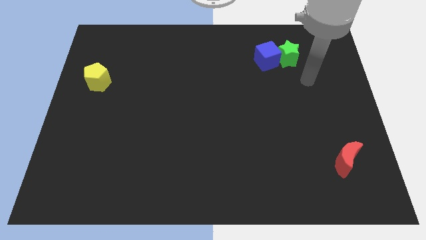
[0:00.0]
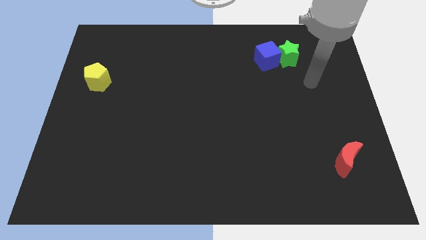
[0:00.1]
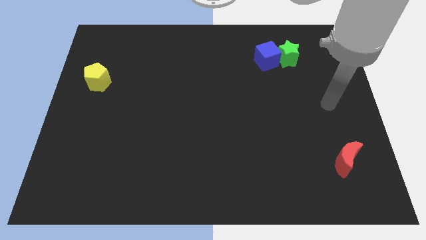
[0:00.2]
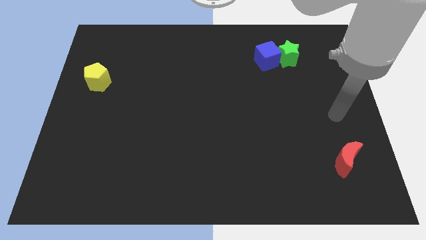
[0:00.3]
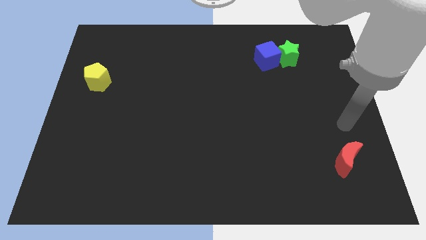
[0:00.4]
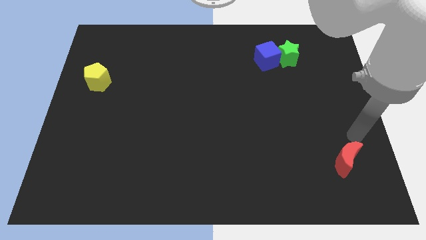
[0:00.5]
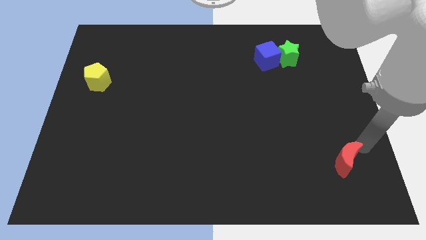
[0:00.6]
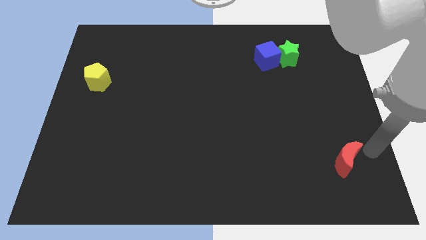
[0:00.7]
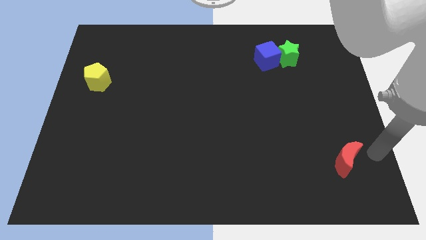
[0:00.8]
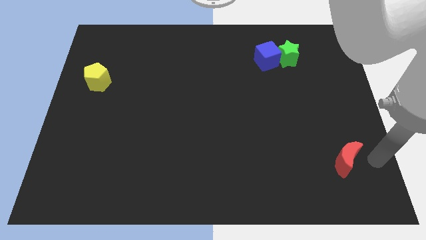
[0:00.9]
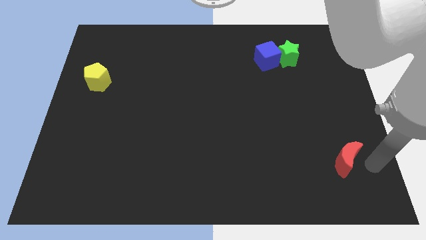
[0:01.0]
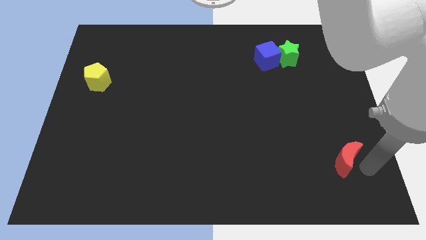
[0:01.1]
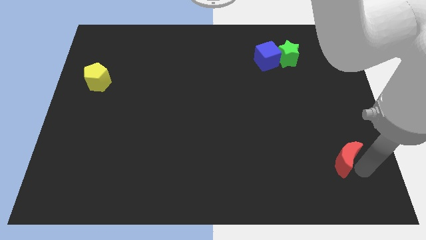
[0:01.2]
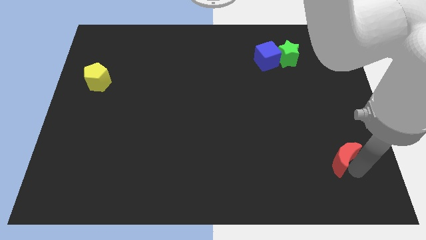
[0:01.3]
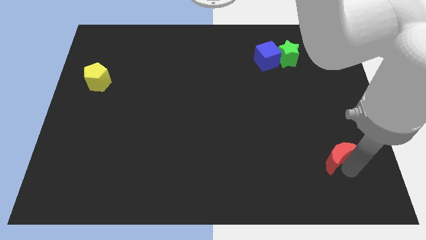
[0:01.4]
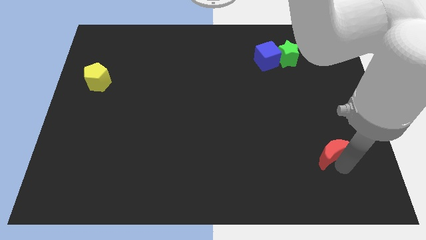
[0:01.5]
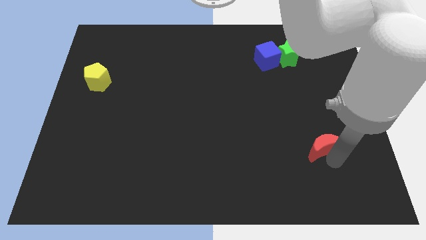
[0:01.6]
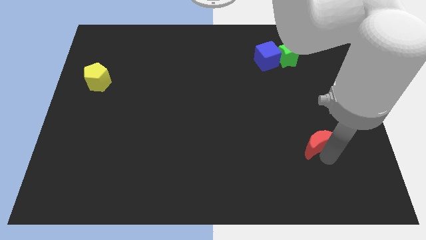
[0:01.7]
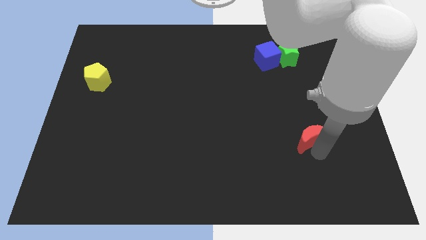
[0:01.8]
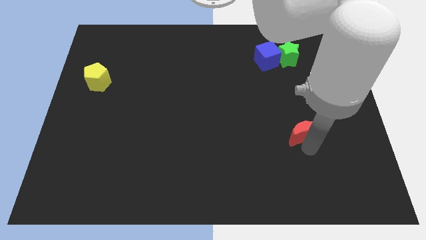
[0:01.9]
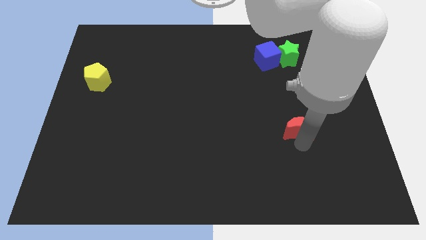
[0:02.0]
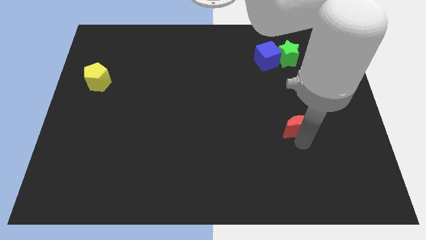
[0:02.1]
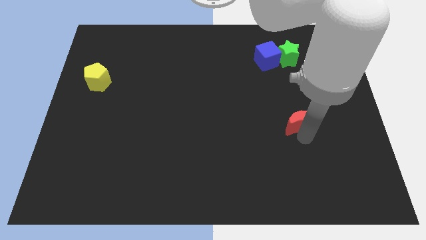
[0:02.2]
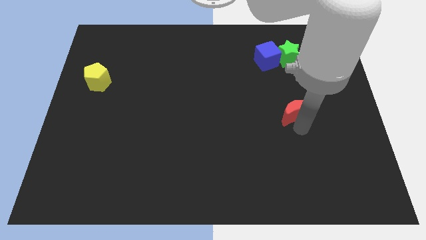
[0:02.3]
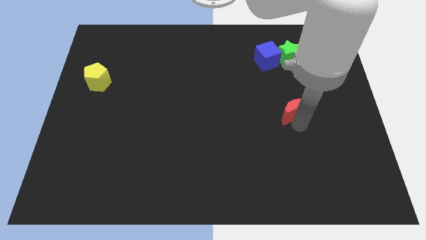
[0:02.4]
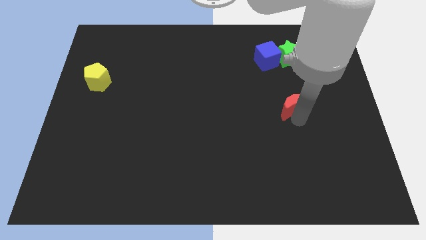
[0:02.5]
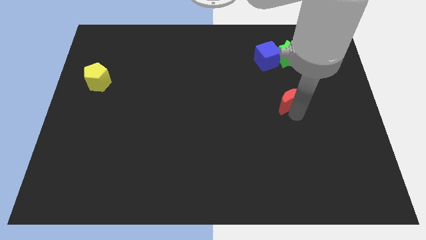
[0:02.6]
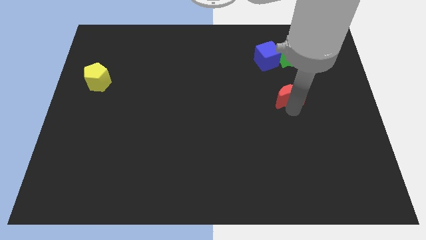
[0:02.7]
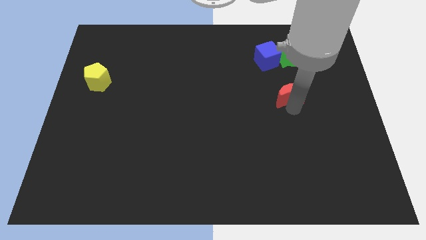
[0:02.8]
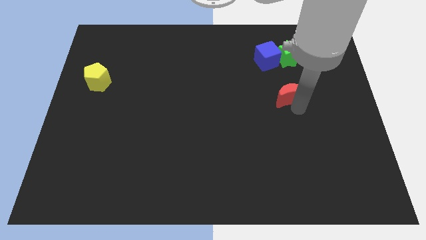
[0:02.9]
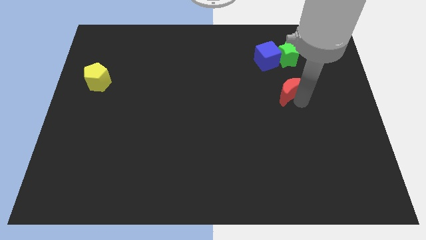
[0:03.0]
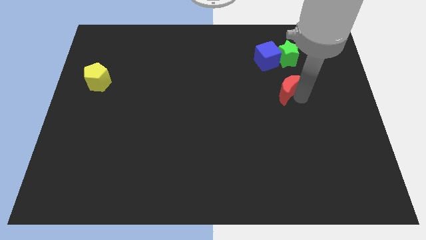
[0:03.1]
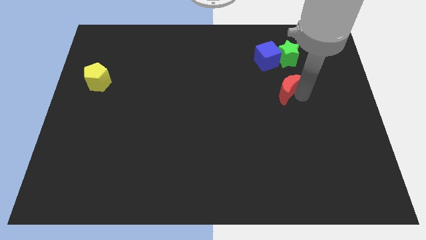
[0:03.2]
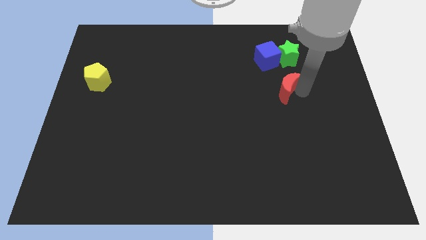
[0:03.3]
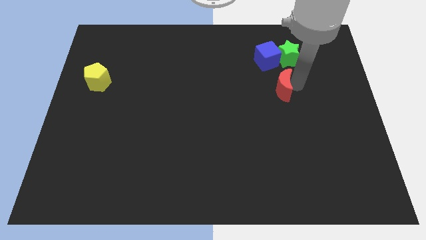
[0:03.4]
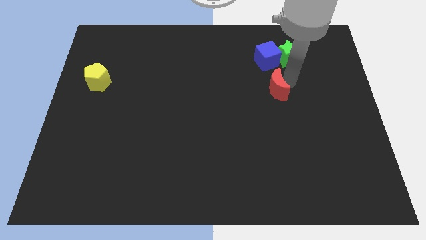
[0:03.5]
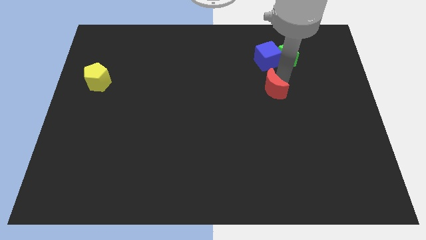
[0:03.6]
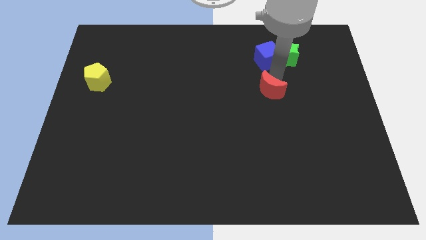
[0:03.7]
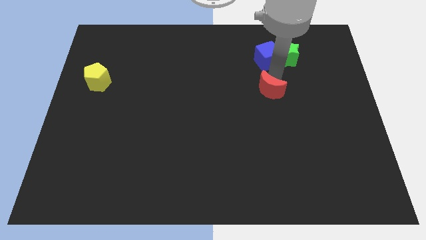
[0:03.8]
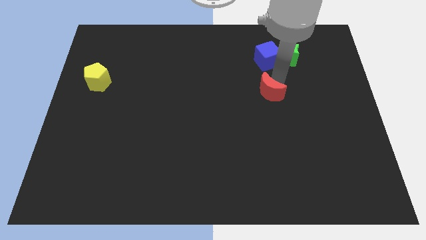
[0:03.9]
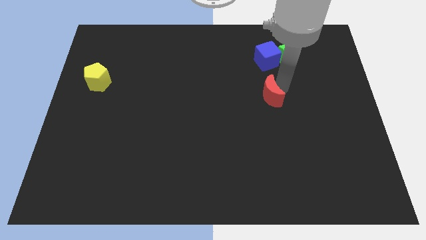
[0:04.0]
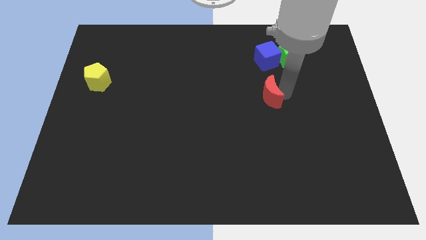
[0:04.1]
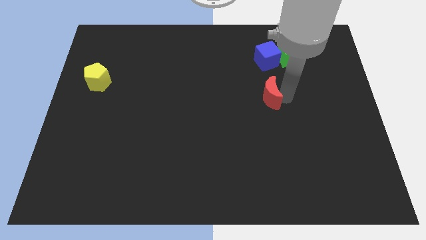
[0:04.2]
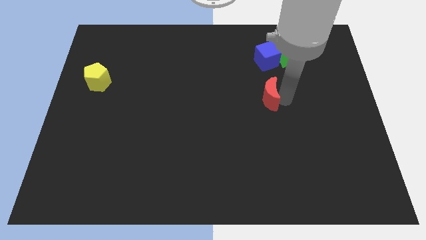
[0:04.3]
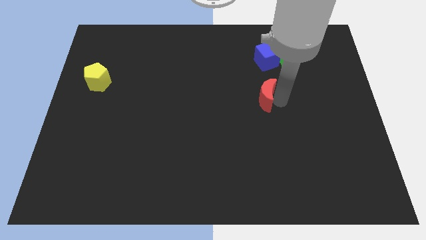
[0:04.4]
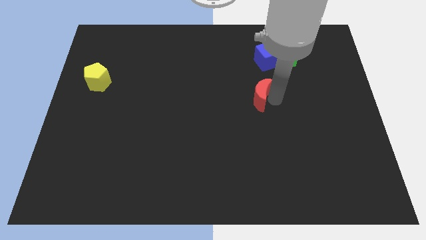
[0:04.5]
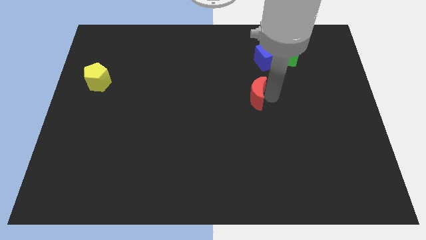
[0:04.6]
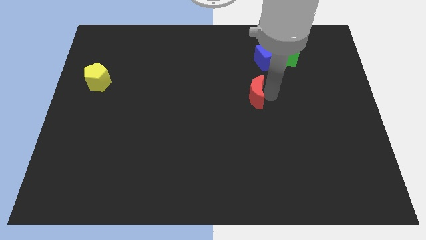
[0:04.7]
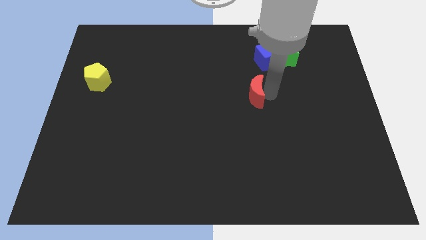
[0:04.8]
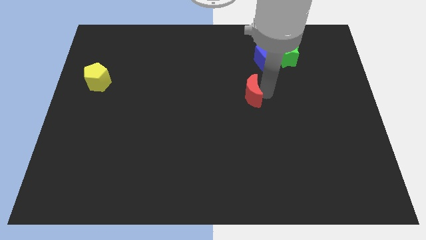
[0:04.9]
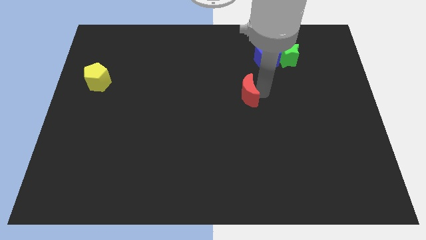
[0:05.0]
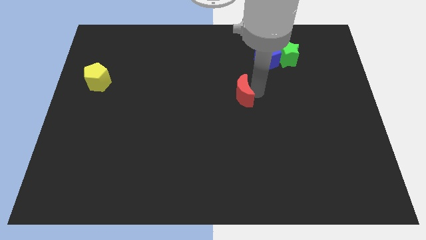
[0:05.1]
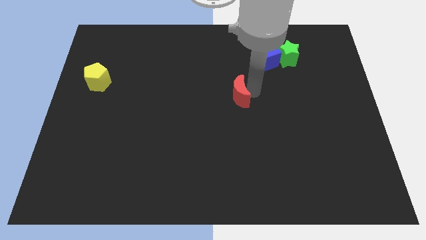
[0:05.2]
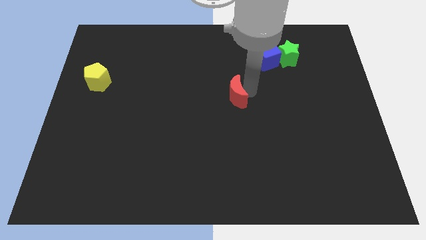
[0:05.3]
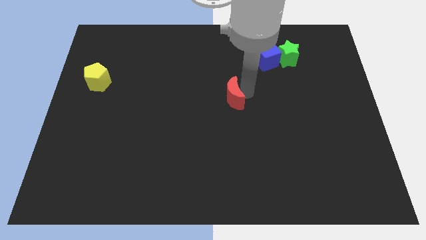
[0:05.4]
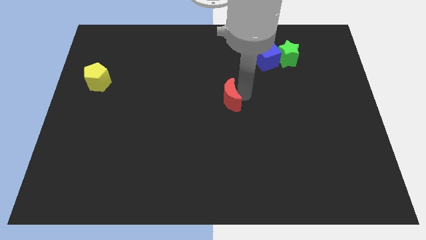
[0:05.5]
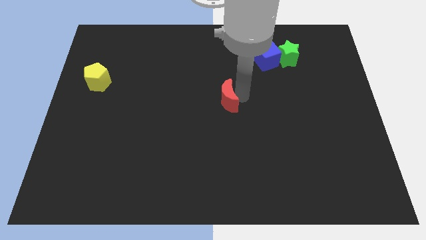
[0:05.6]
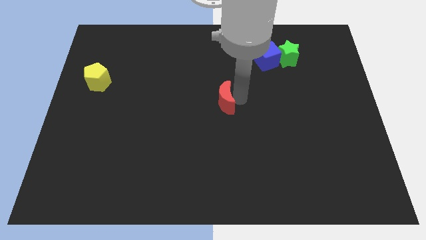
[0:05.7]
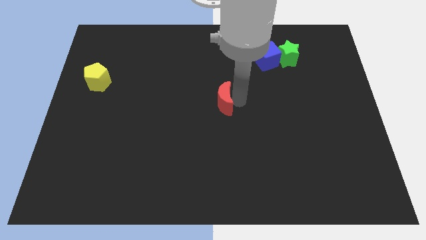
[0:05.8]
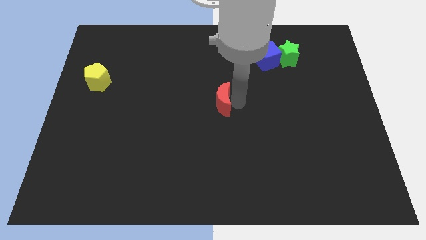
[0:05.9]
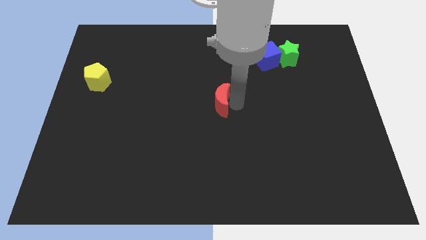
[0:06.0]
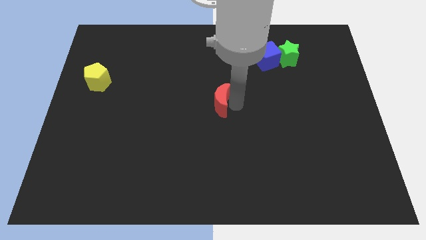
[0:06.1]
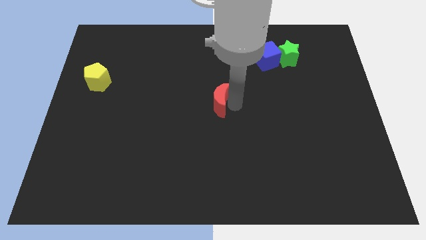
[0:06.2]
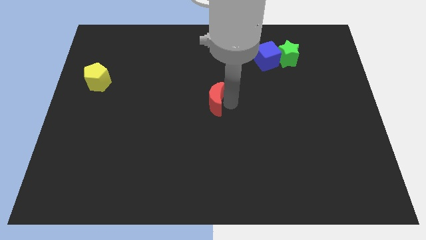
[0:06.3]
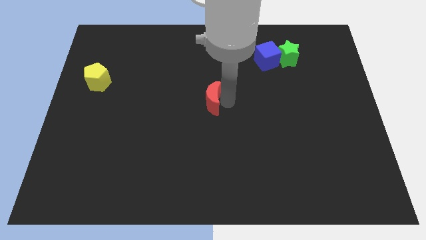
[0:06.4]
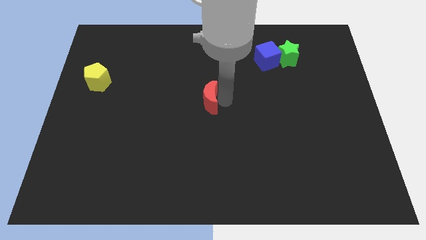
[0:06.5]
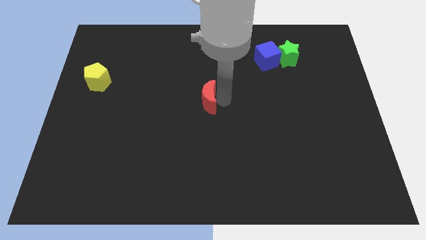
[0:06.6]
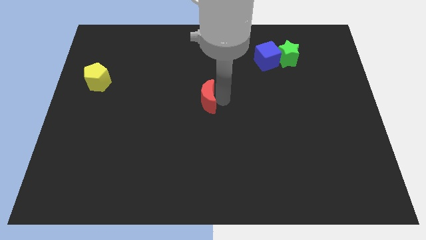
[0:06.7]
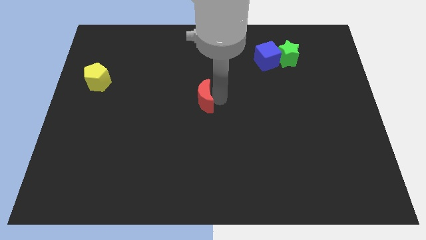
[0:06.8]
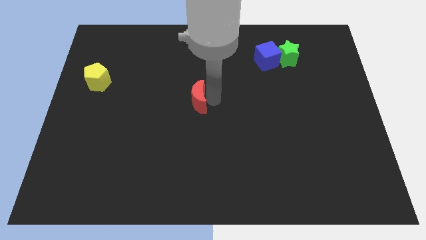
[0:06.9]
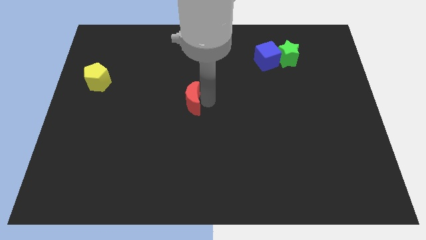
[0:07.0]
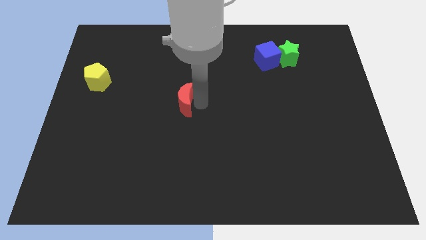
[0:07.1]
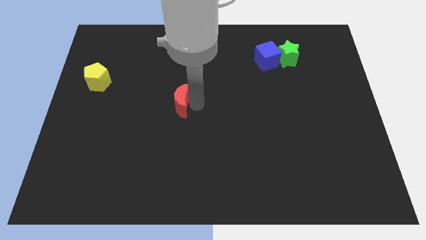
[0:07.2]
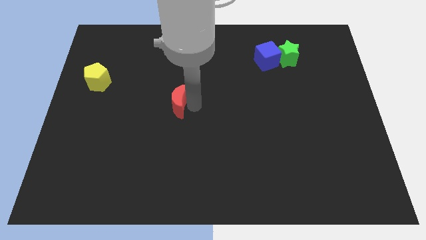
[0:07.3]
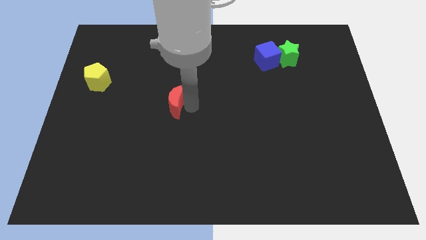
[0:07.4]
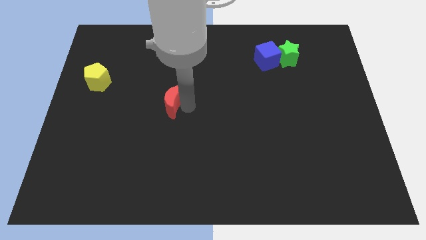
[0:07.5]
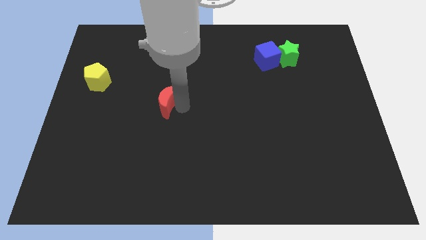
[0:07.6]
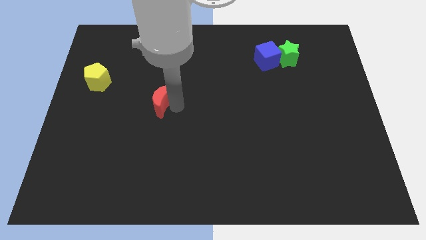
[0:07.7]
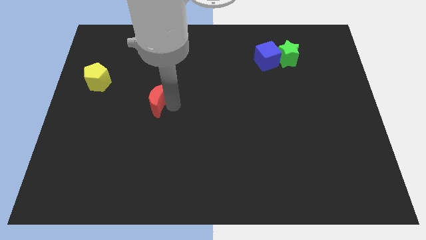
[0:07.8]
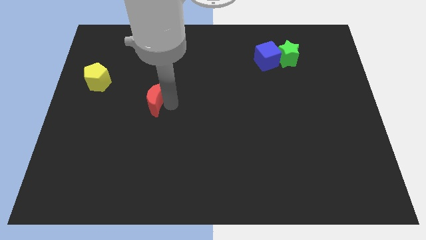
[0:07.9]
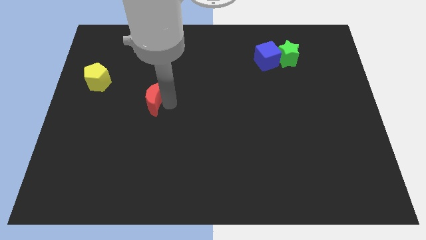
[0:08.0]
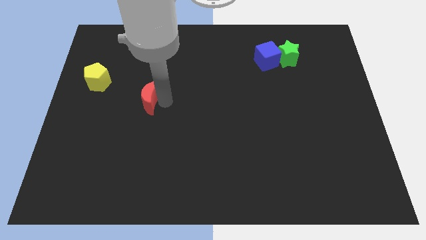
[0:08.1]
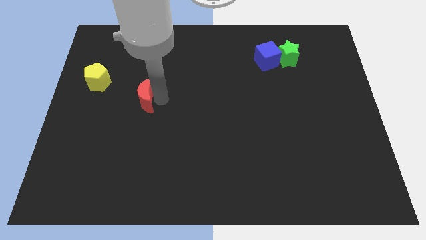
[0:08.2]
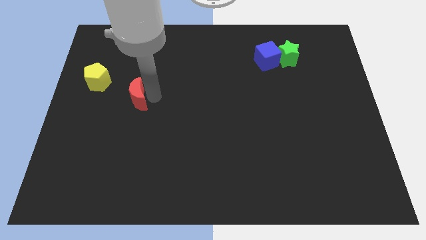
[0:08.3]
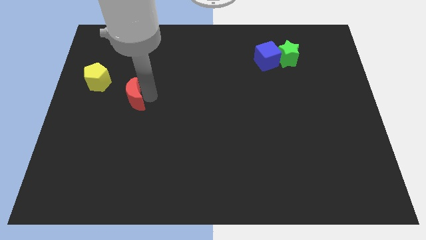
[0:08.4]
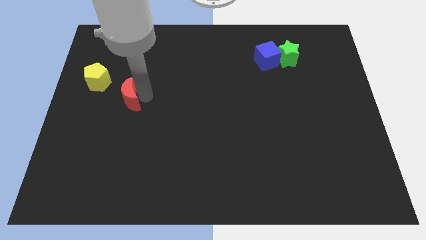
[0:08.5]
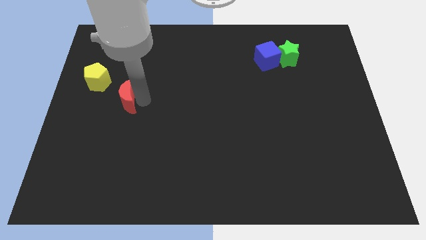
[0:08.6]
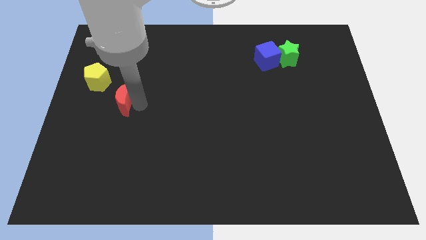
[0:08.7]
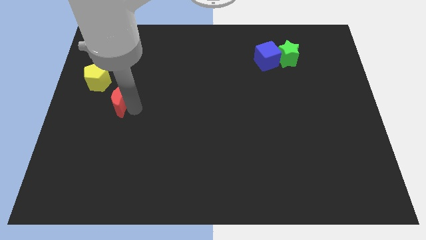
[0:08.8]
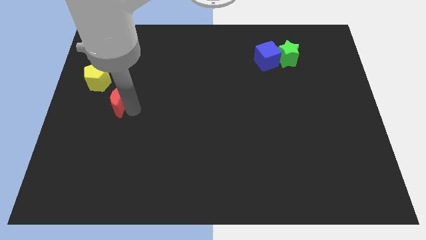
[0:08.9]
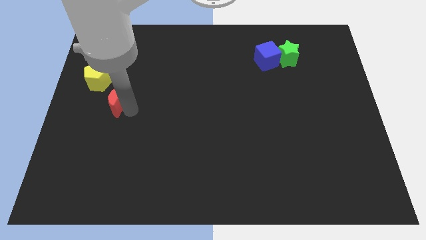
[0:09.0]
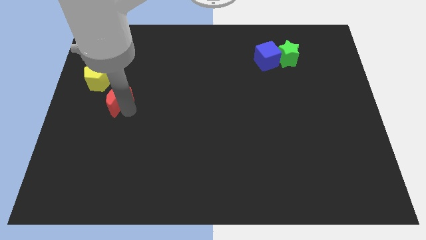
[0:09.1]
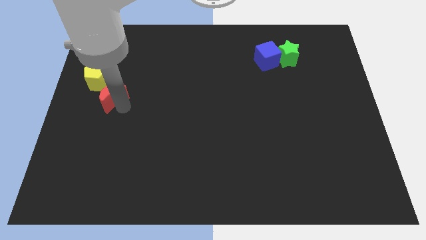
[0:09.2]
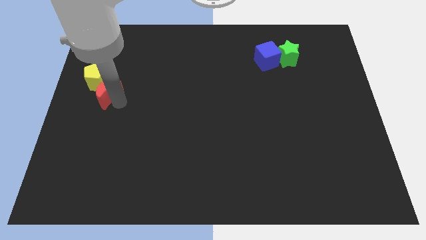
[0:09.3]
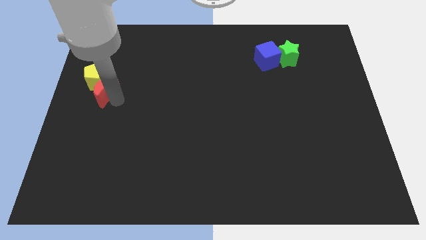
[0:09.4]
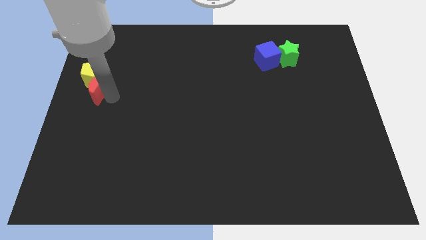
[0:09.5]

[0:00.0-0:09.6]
push the moon next to the pentagon
